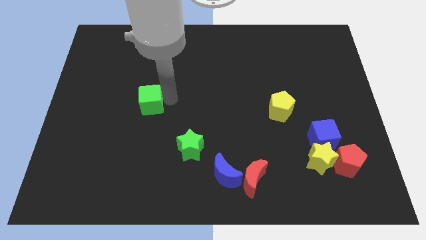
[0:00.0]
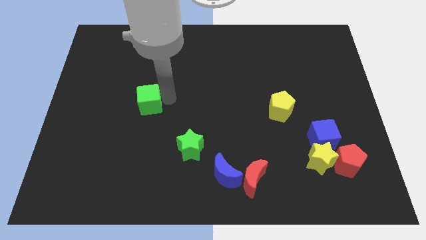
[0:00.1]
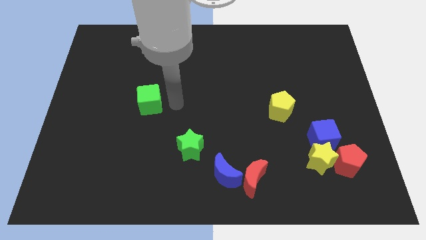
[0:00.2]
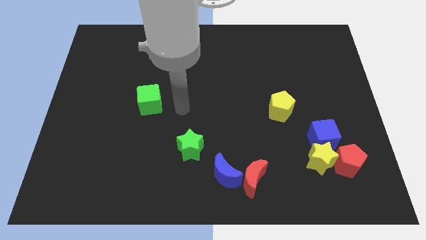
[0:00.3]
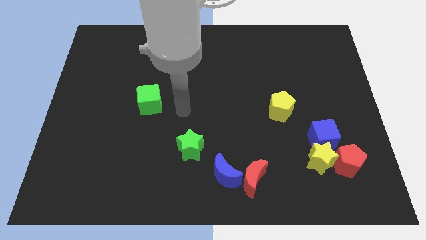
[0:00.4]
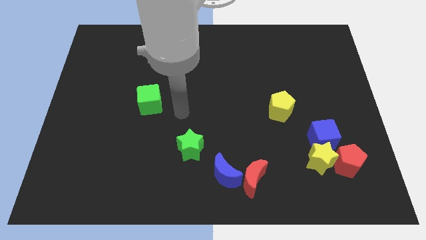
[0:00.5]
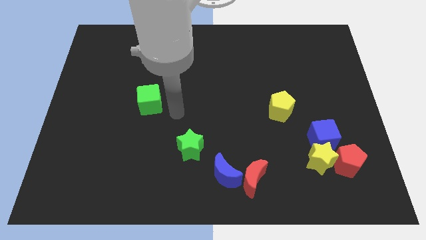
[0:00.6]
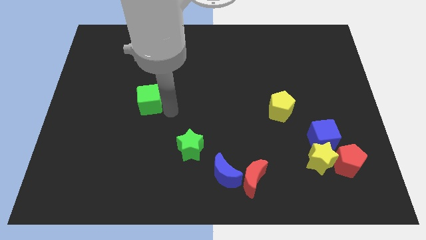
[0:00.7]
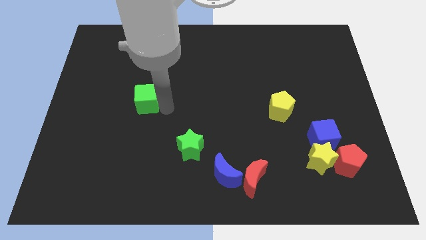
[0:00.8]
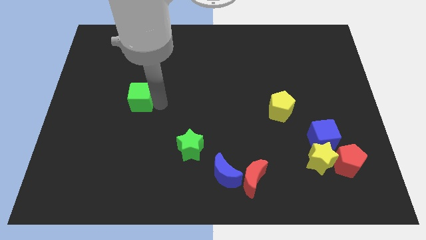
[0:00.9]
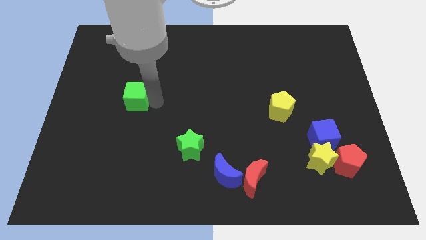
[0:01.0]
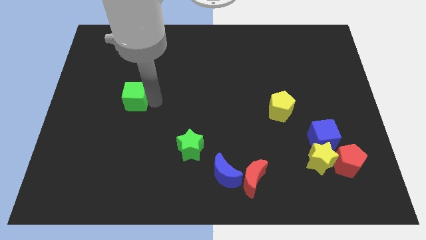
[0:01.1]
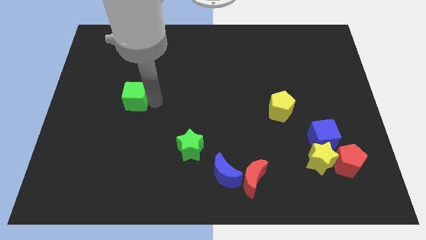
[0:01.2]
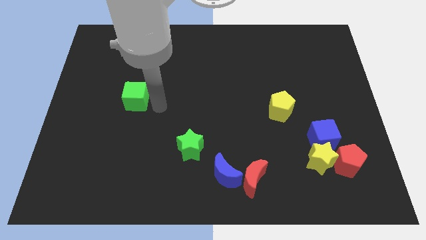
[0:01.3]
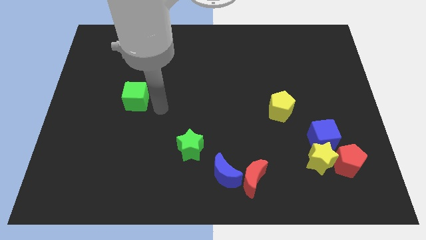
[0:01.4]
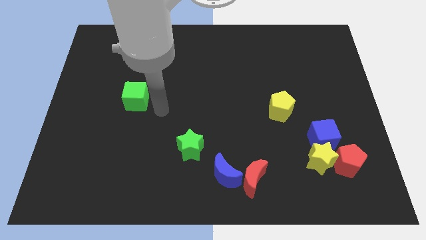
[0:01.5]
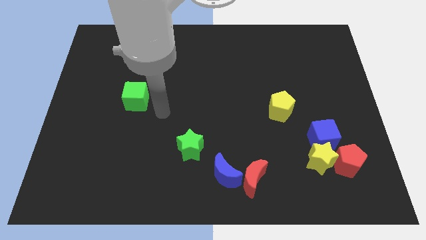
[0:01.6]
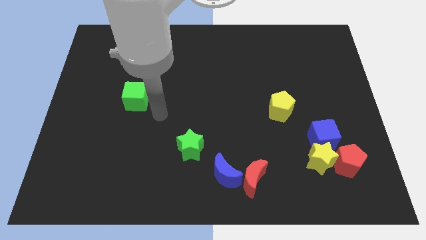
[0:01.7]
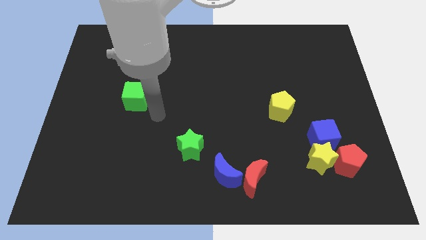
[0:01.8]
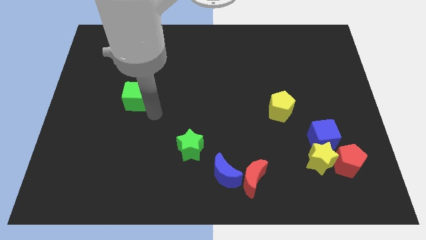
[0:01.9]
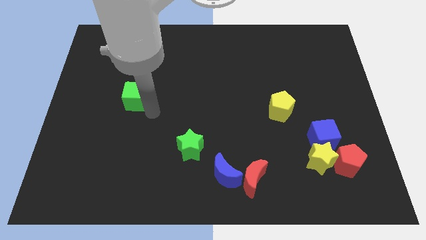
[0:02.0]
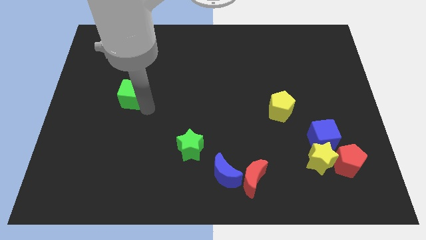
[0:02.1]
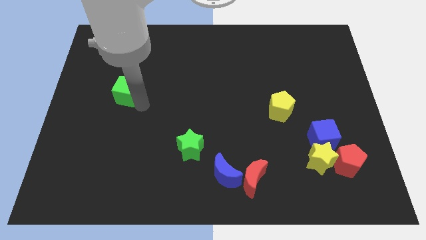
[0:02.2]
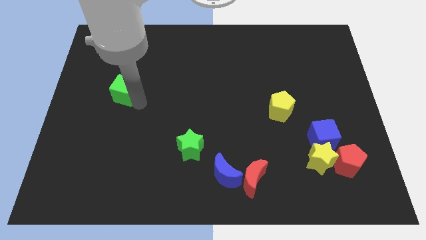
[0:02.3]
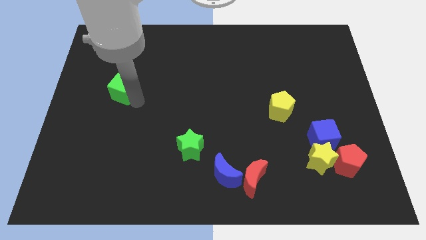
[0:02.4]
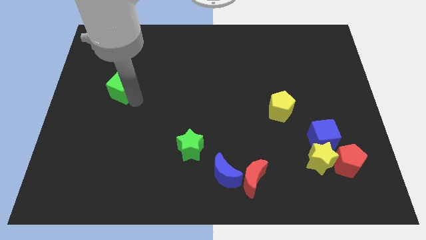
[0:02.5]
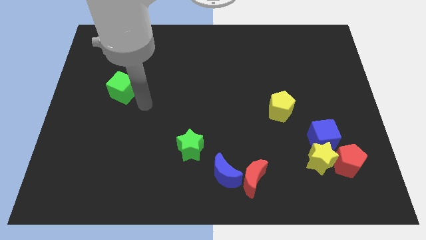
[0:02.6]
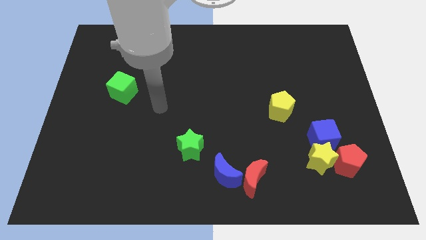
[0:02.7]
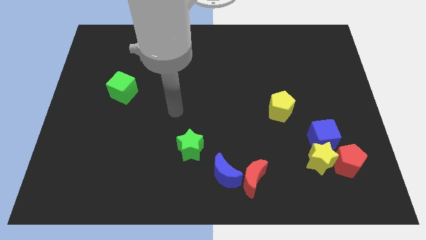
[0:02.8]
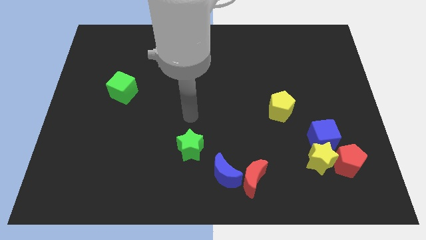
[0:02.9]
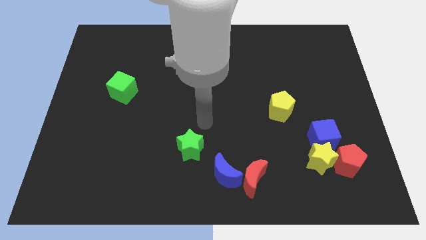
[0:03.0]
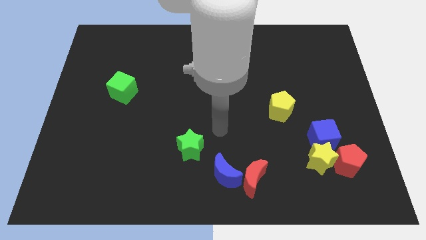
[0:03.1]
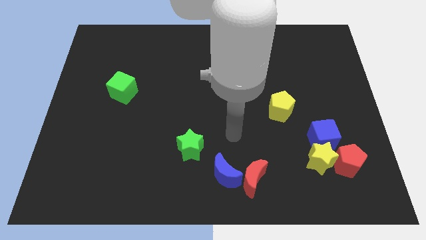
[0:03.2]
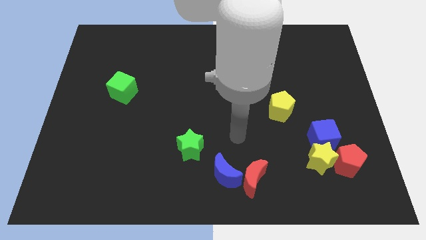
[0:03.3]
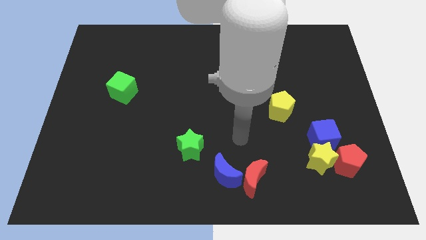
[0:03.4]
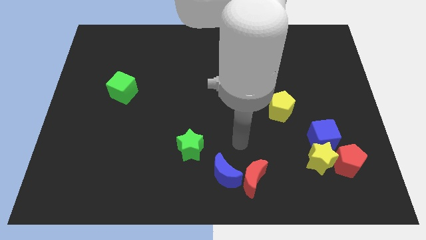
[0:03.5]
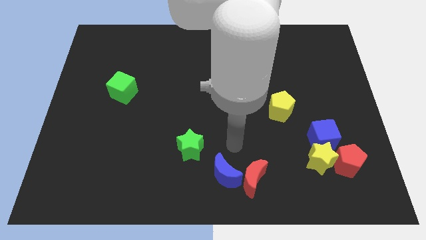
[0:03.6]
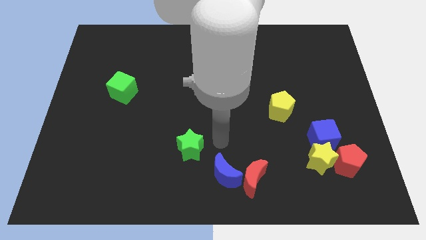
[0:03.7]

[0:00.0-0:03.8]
slide the green cube to the left side of the board

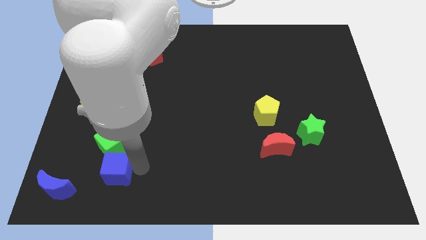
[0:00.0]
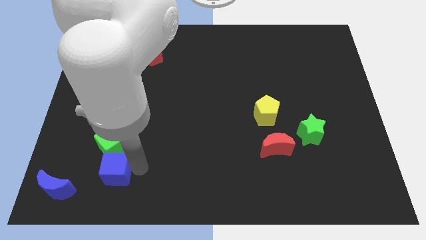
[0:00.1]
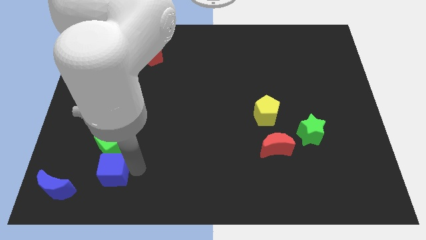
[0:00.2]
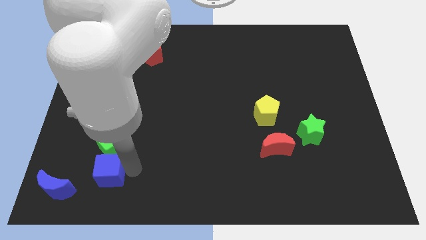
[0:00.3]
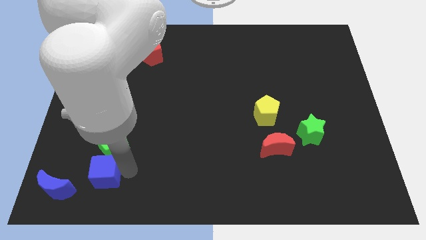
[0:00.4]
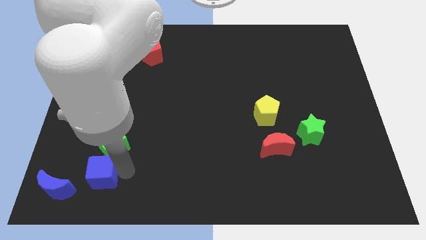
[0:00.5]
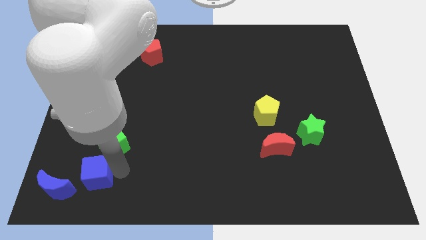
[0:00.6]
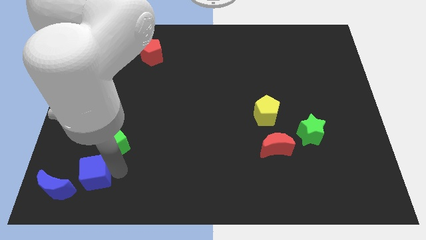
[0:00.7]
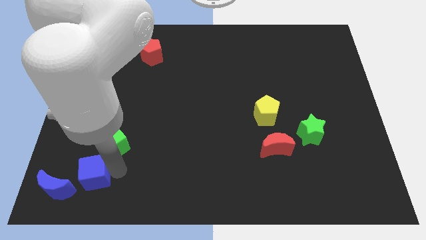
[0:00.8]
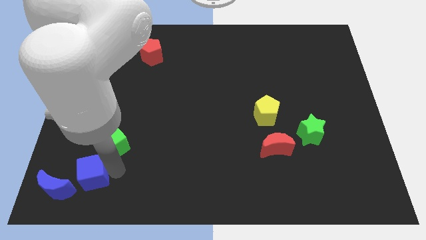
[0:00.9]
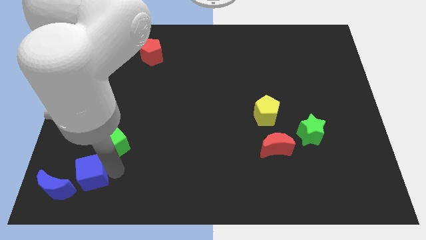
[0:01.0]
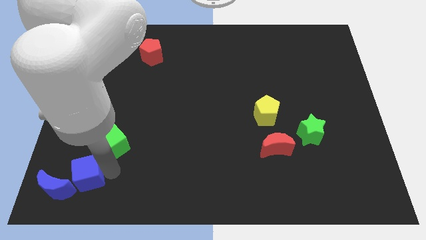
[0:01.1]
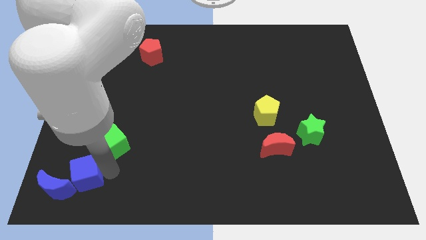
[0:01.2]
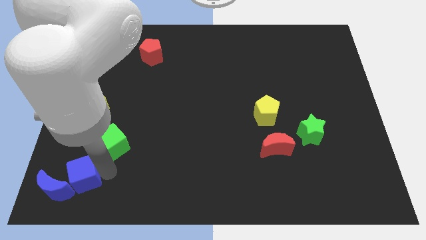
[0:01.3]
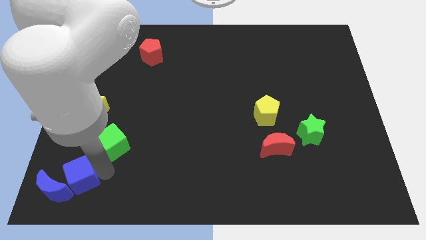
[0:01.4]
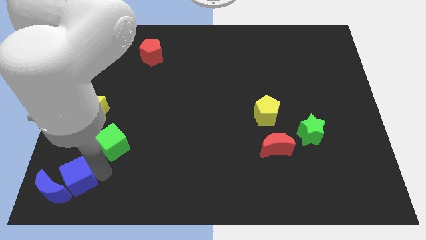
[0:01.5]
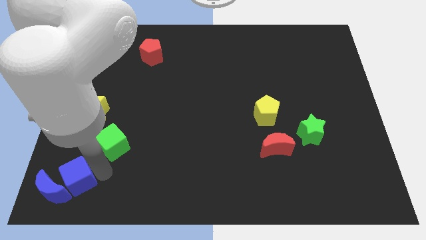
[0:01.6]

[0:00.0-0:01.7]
push the blue blocks towards the bottom left corner of the board

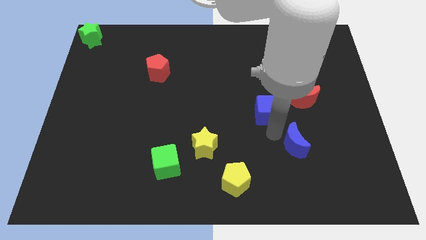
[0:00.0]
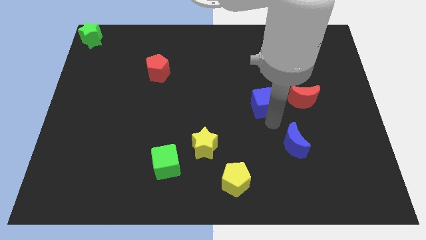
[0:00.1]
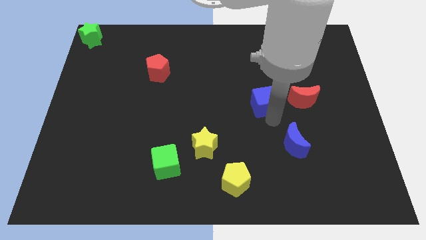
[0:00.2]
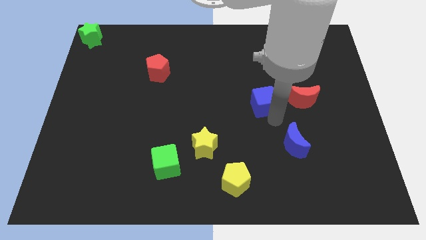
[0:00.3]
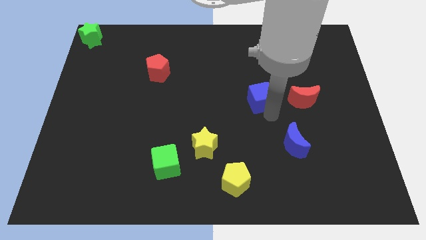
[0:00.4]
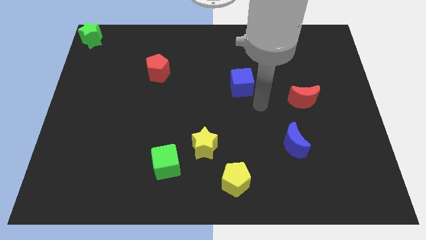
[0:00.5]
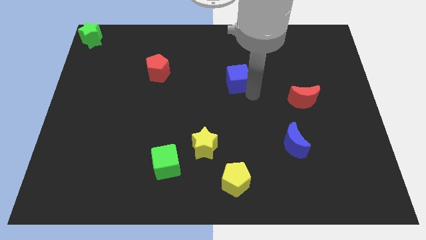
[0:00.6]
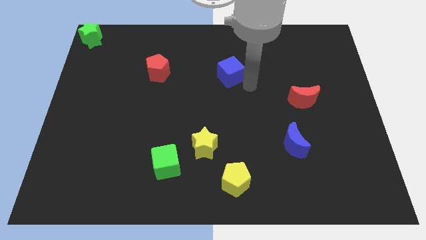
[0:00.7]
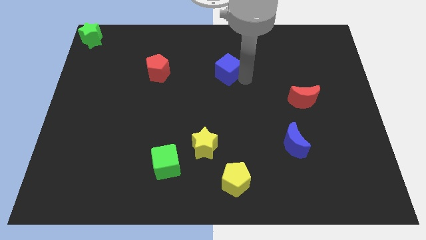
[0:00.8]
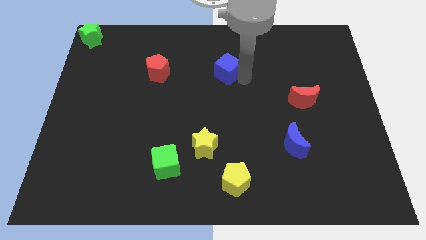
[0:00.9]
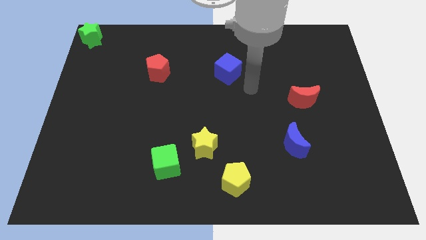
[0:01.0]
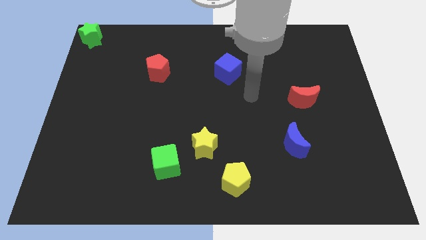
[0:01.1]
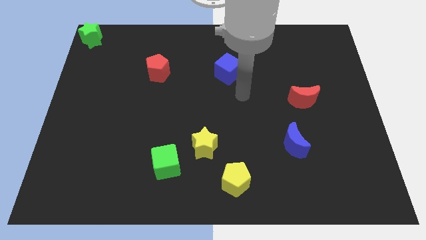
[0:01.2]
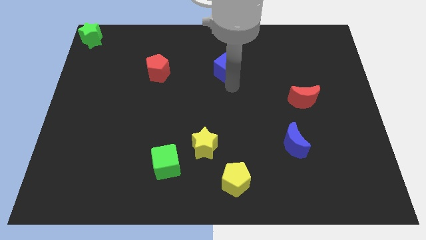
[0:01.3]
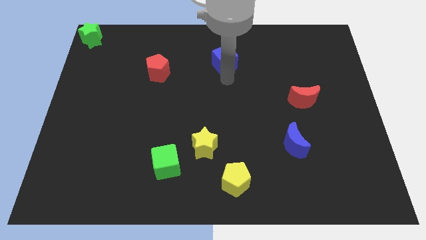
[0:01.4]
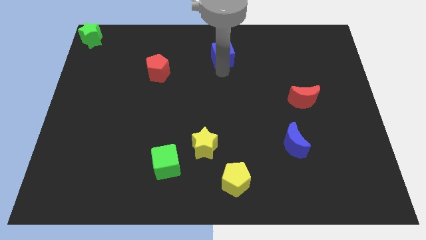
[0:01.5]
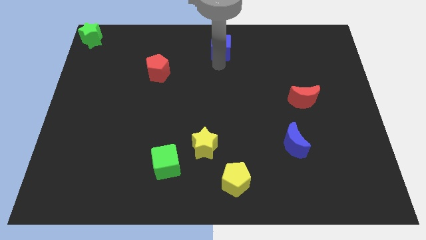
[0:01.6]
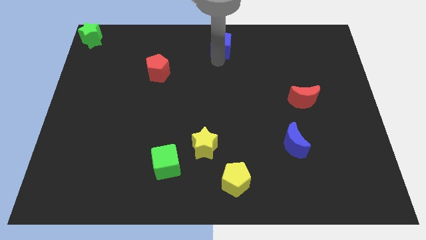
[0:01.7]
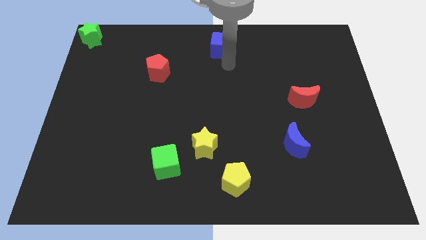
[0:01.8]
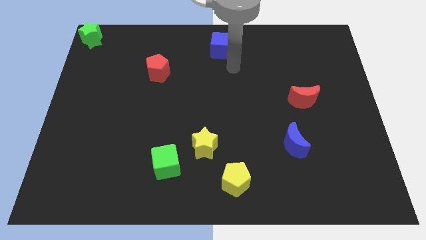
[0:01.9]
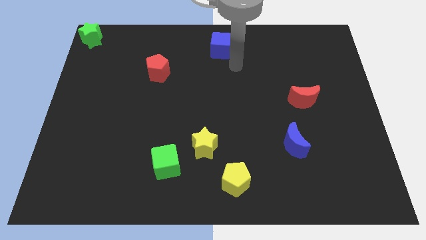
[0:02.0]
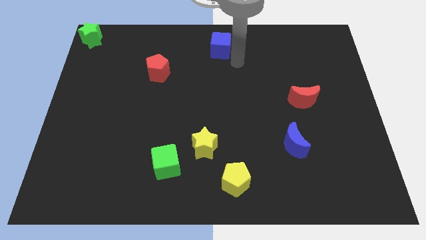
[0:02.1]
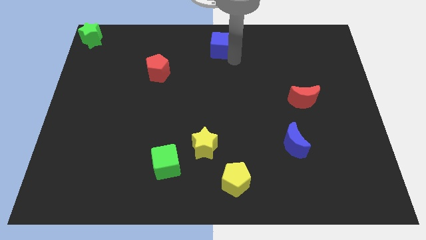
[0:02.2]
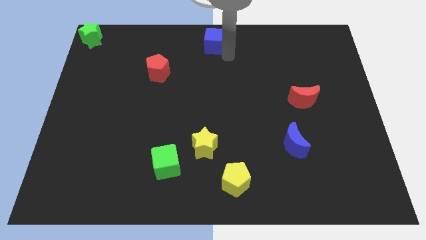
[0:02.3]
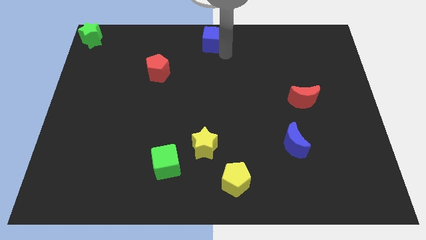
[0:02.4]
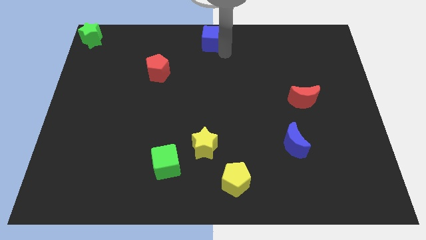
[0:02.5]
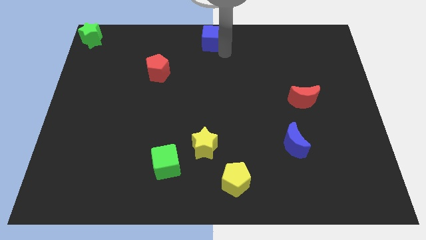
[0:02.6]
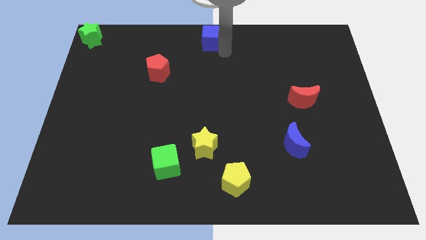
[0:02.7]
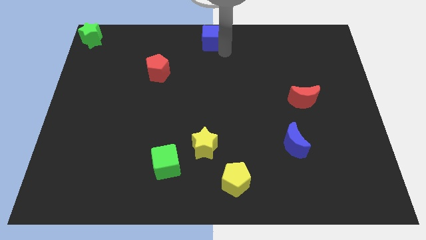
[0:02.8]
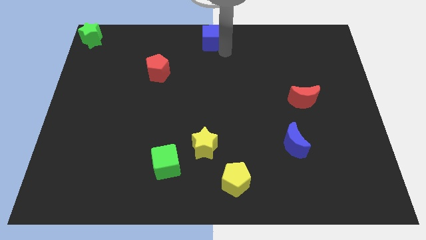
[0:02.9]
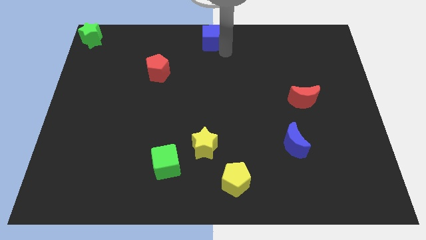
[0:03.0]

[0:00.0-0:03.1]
place the blue cube to the top center of the board

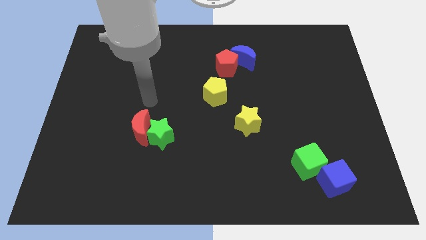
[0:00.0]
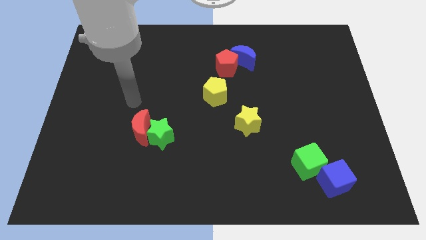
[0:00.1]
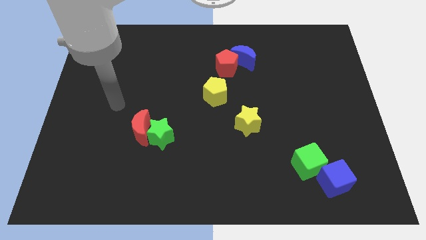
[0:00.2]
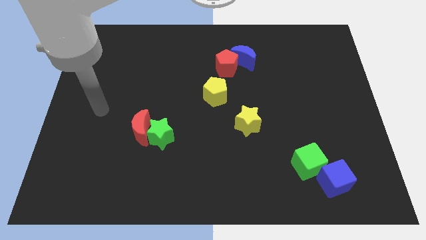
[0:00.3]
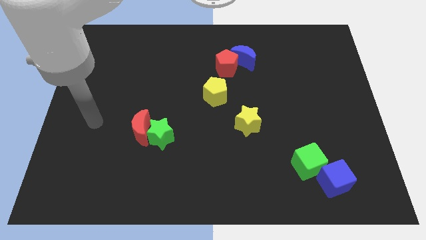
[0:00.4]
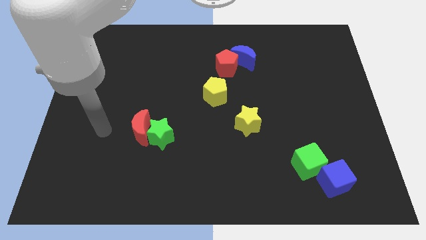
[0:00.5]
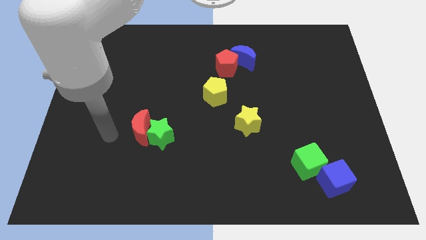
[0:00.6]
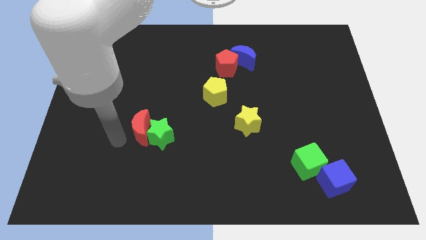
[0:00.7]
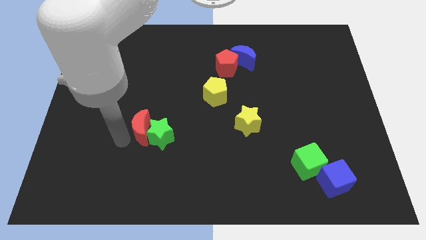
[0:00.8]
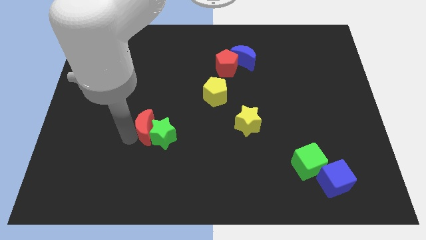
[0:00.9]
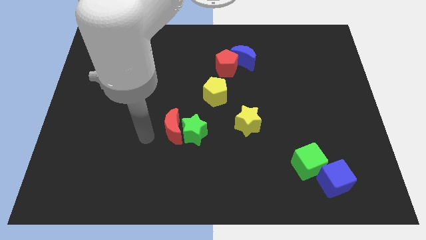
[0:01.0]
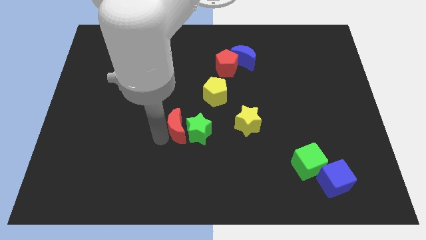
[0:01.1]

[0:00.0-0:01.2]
push red moon along with green star slightly to the right
